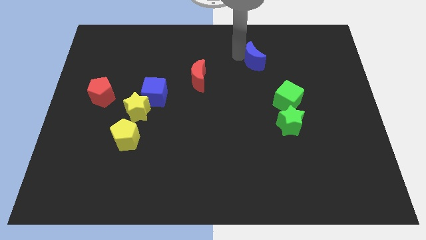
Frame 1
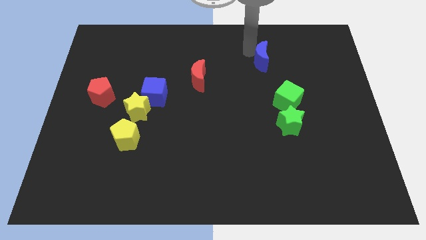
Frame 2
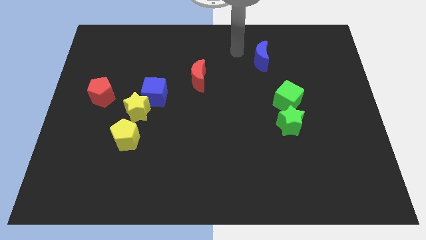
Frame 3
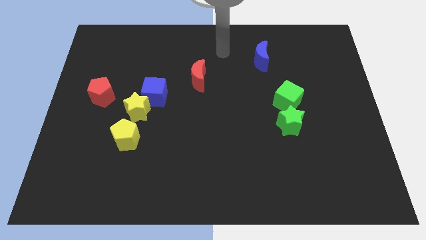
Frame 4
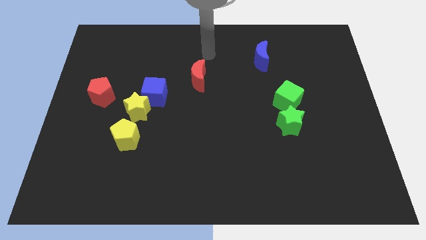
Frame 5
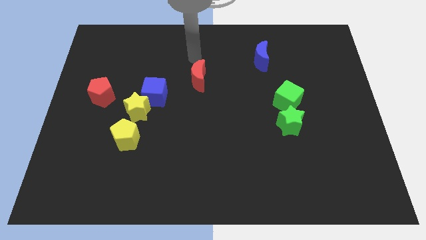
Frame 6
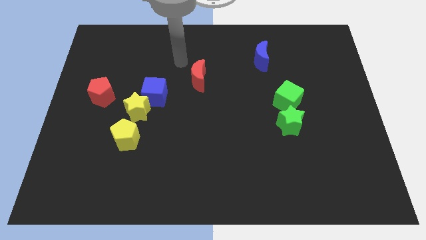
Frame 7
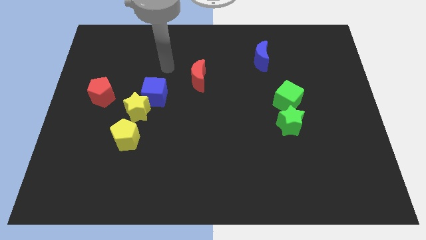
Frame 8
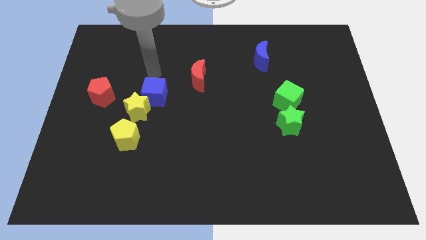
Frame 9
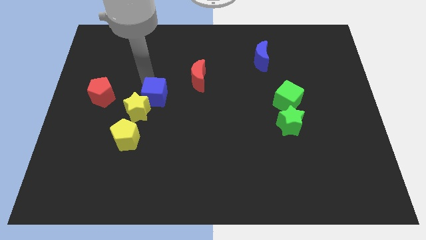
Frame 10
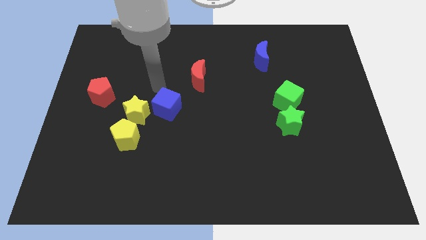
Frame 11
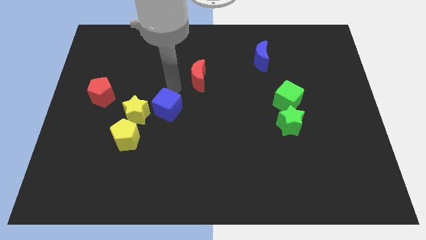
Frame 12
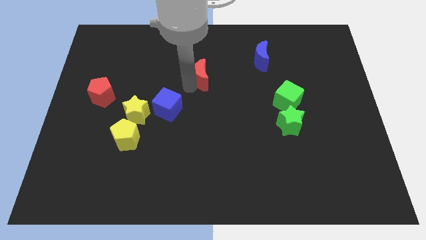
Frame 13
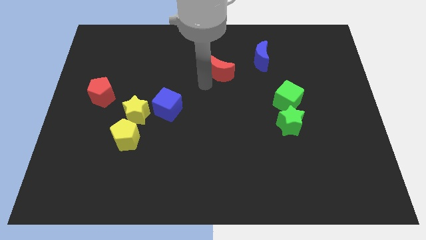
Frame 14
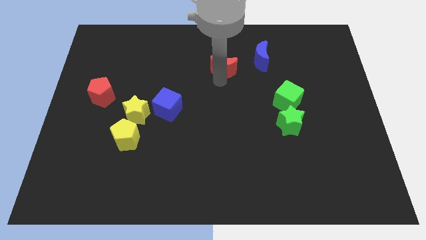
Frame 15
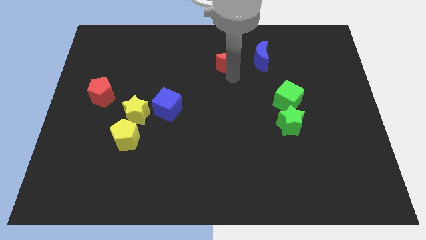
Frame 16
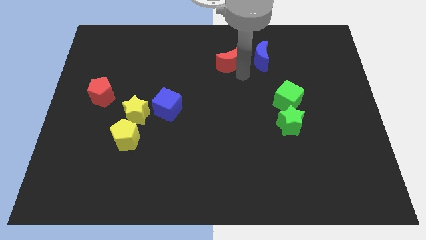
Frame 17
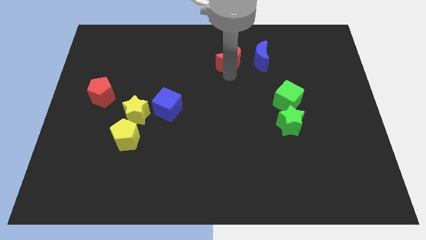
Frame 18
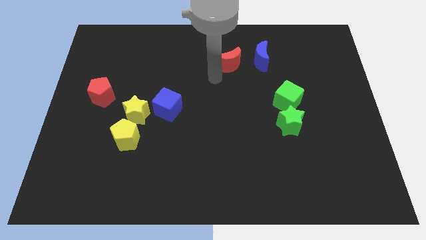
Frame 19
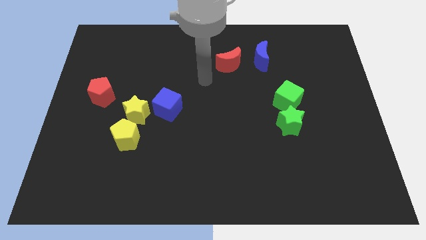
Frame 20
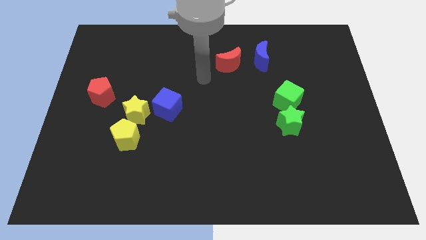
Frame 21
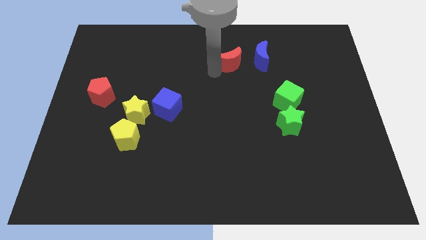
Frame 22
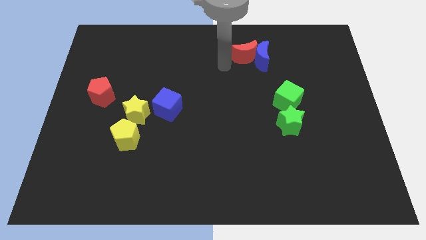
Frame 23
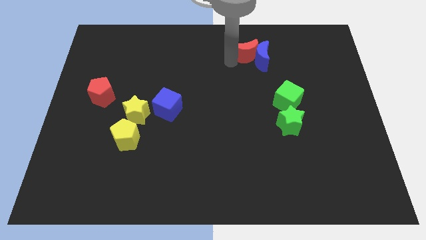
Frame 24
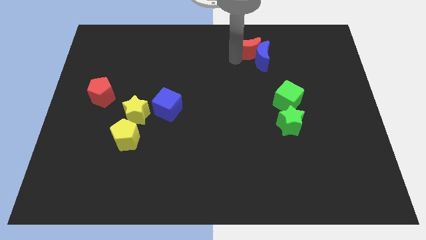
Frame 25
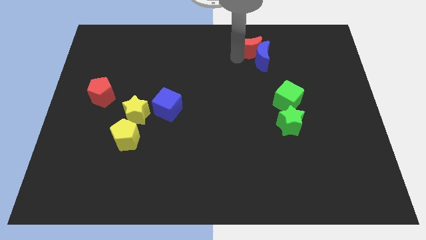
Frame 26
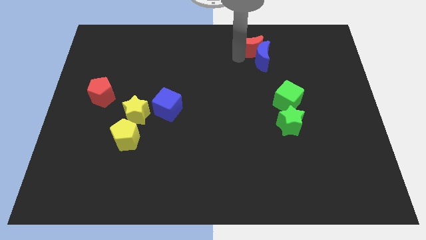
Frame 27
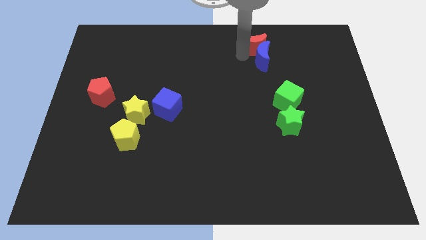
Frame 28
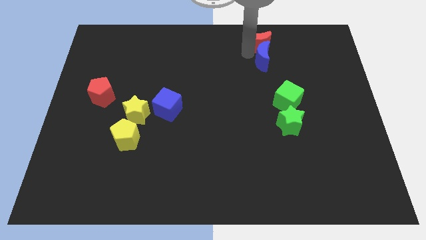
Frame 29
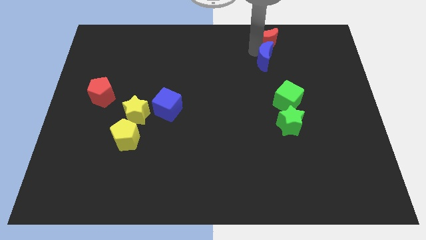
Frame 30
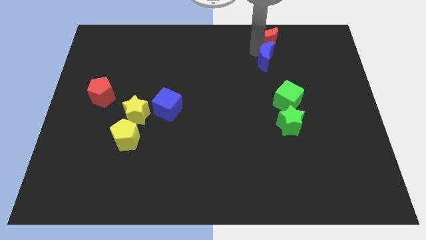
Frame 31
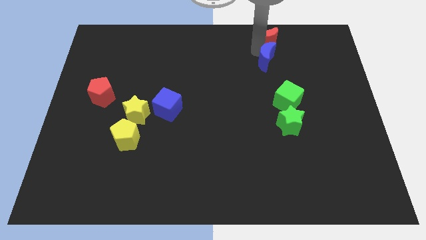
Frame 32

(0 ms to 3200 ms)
place the red crescent above the blue crescent

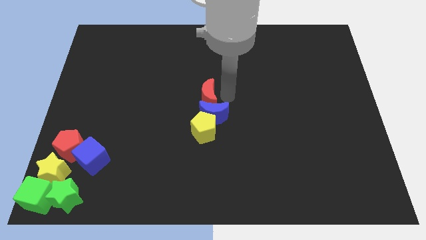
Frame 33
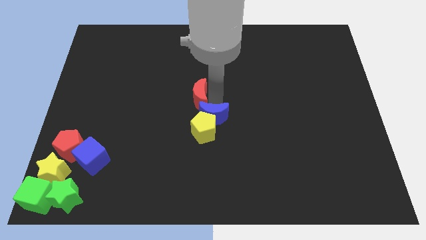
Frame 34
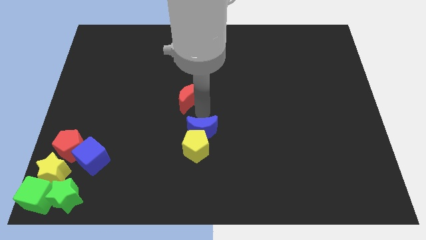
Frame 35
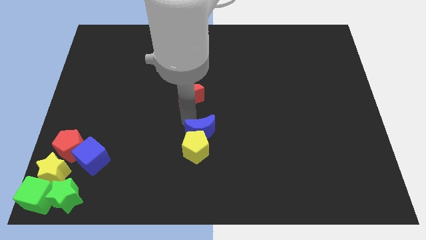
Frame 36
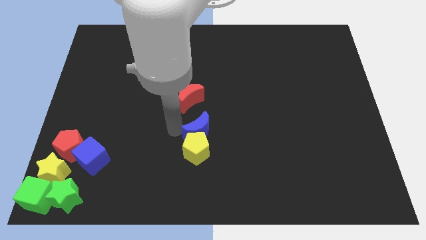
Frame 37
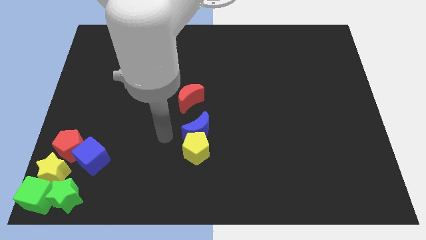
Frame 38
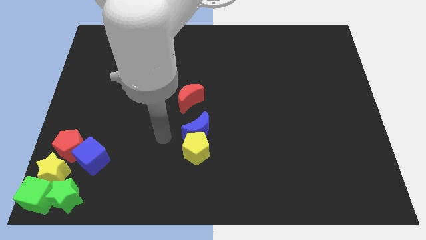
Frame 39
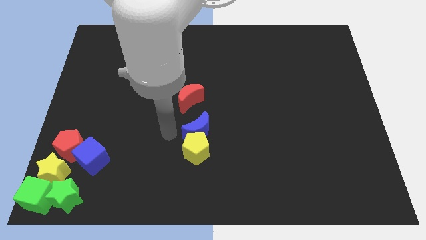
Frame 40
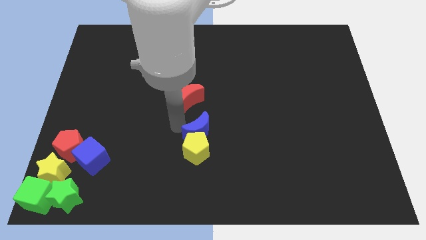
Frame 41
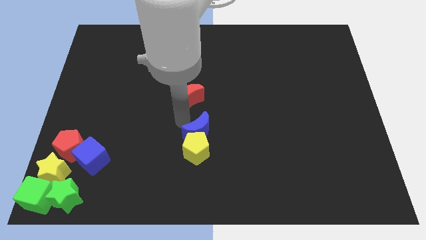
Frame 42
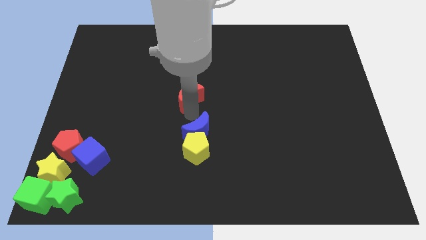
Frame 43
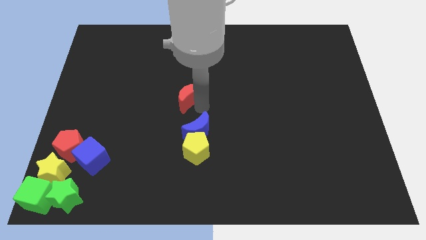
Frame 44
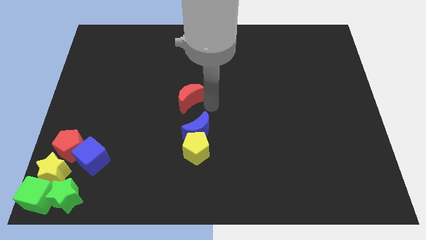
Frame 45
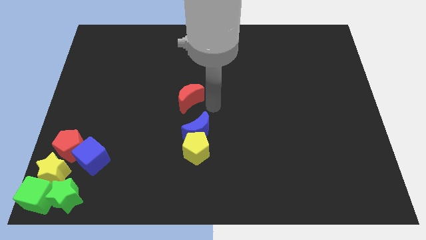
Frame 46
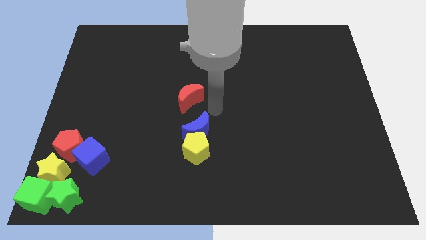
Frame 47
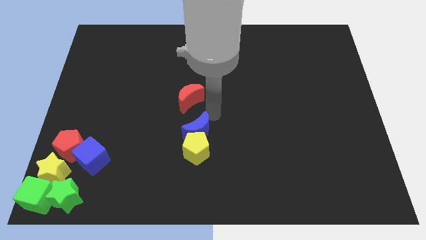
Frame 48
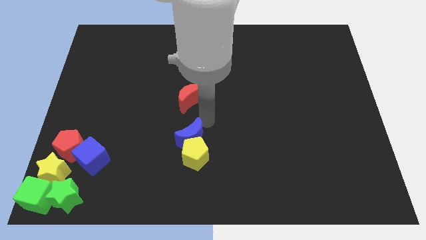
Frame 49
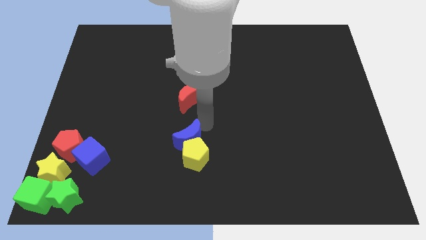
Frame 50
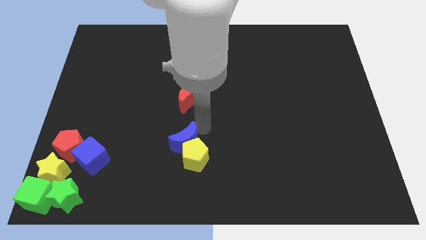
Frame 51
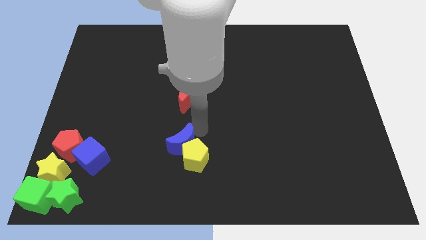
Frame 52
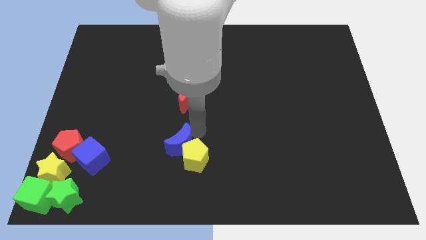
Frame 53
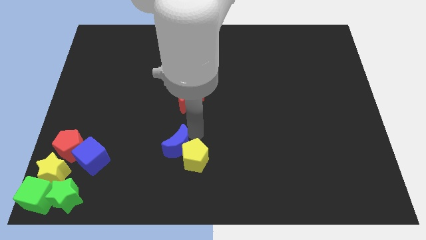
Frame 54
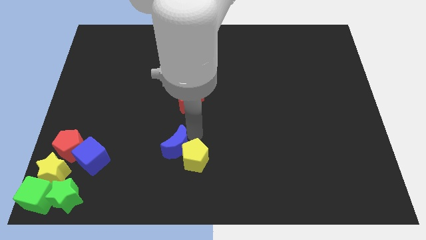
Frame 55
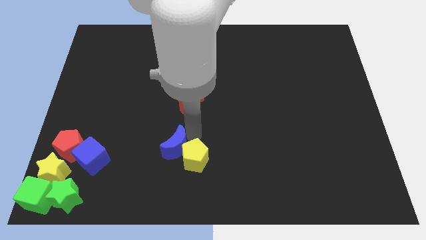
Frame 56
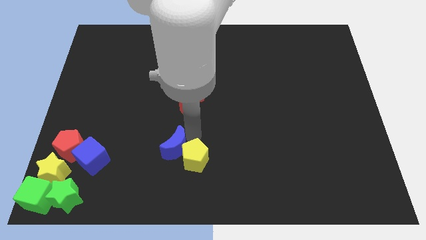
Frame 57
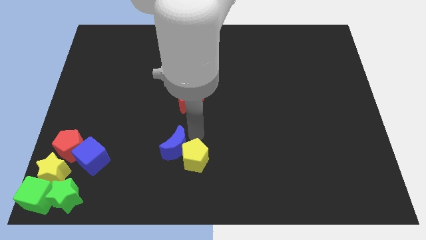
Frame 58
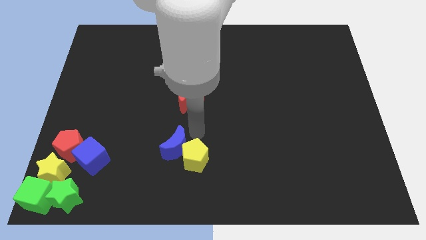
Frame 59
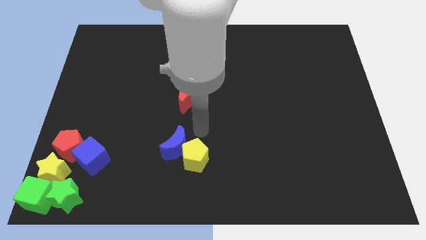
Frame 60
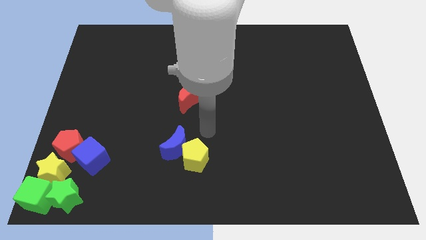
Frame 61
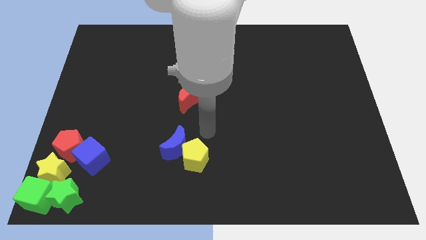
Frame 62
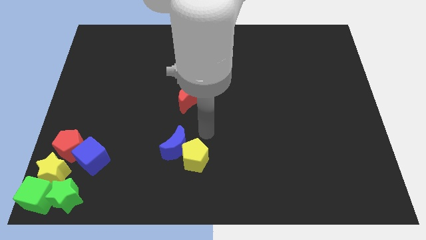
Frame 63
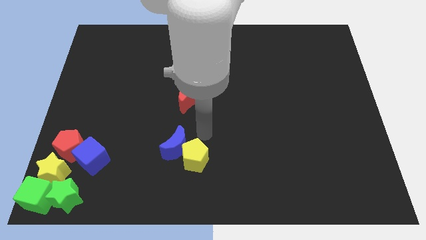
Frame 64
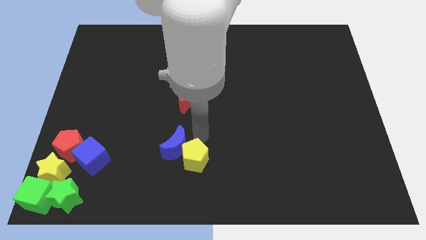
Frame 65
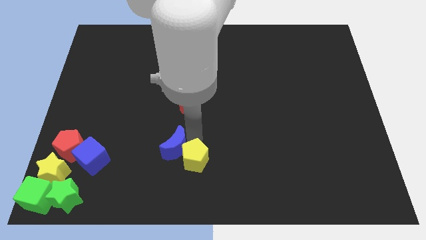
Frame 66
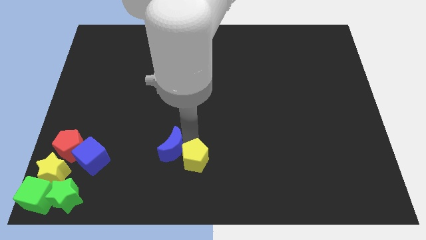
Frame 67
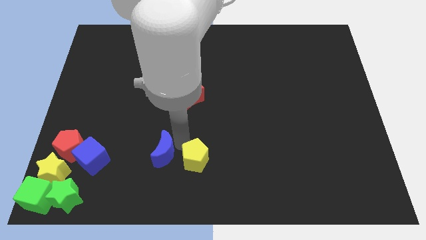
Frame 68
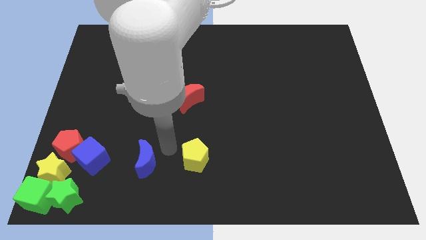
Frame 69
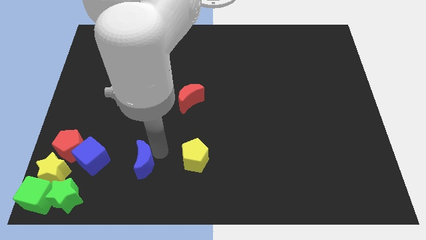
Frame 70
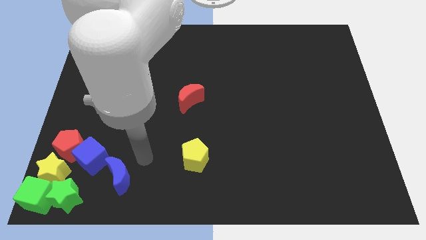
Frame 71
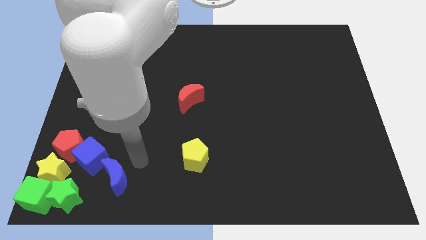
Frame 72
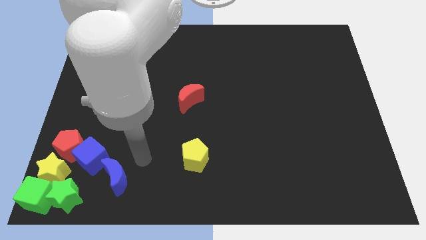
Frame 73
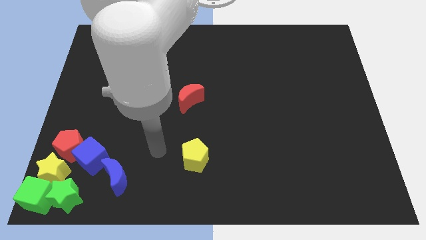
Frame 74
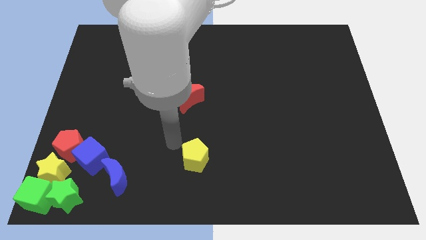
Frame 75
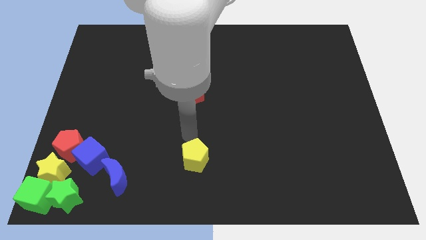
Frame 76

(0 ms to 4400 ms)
place the blue moon right to the blue cube

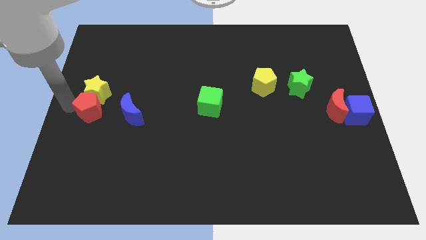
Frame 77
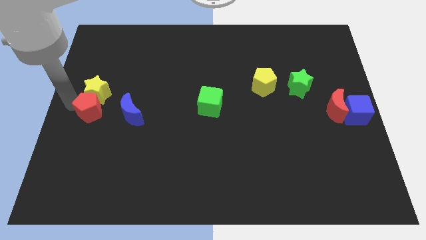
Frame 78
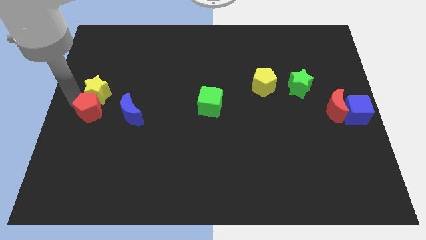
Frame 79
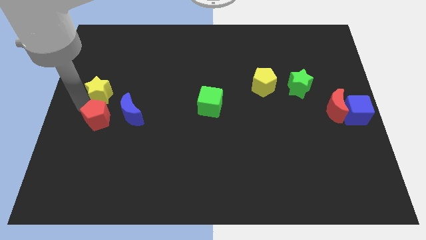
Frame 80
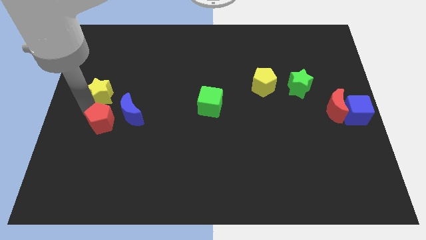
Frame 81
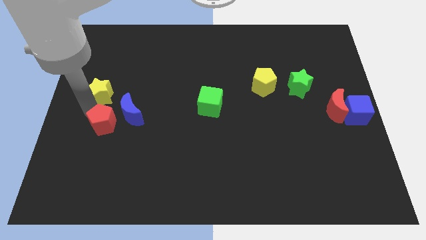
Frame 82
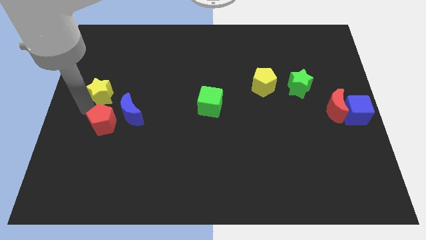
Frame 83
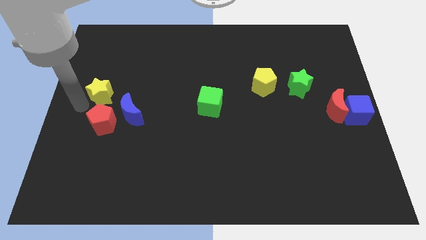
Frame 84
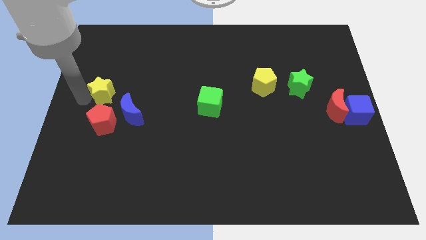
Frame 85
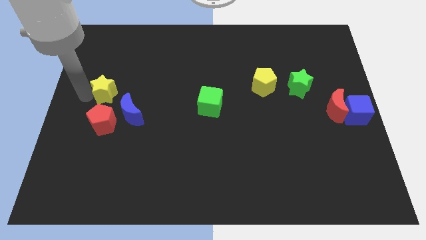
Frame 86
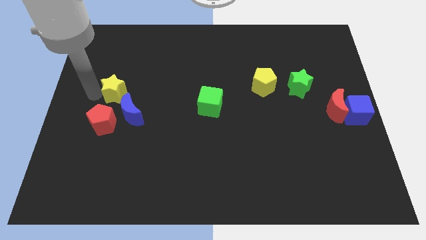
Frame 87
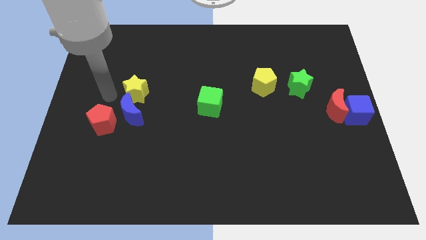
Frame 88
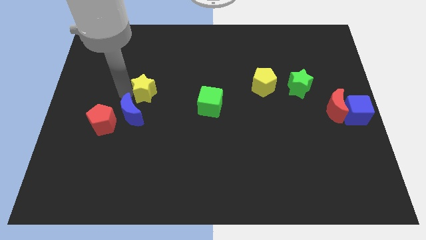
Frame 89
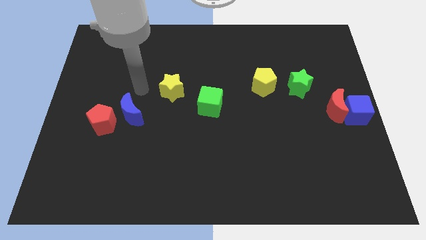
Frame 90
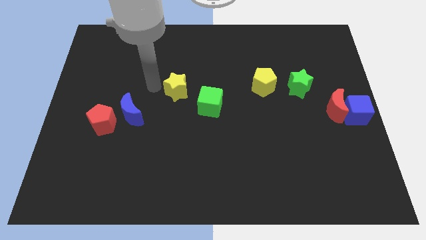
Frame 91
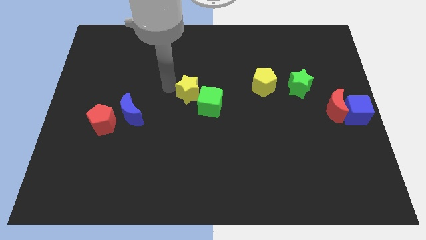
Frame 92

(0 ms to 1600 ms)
push yellow star to the left of green cube
